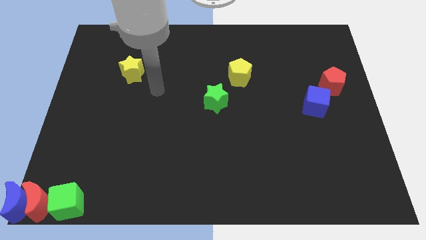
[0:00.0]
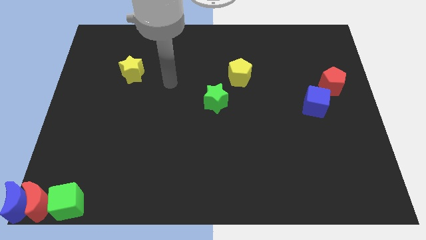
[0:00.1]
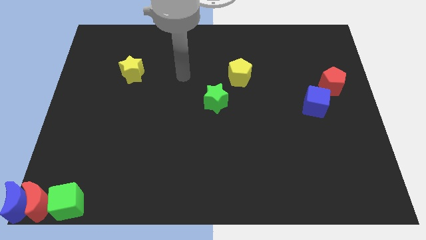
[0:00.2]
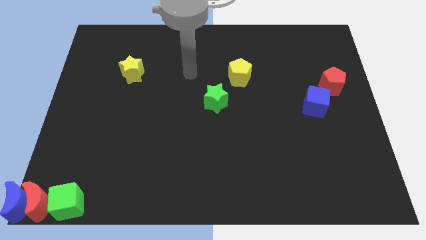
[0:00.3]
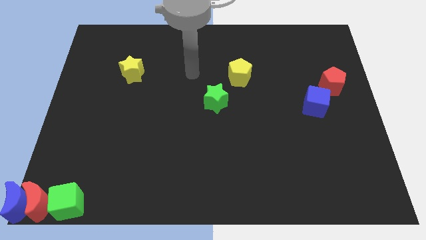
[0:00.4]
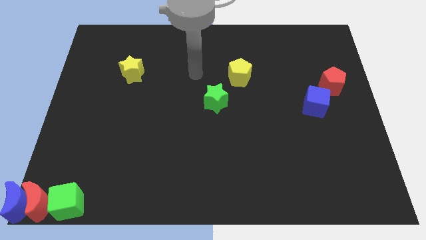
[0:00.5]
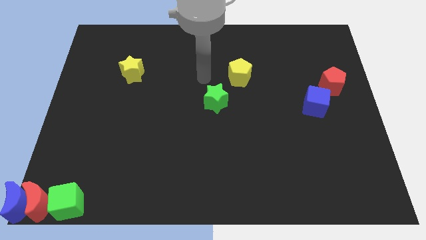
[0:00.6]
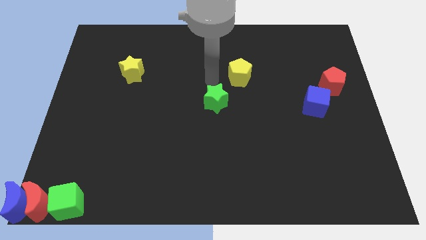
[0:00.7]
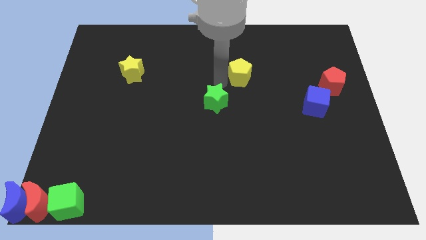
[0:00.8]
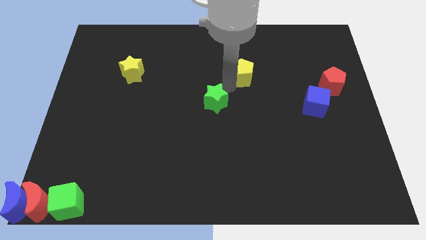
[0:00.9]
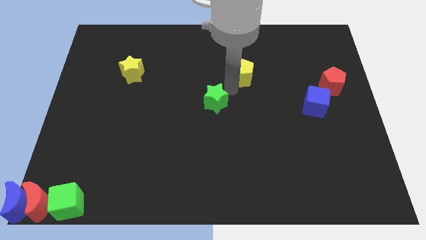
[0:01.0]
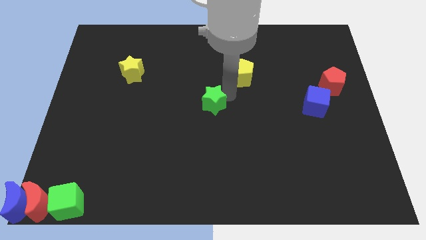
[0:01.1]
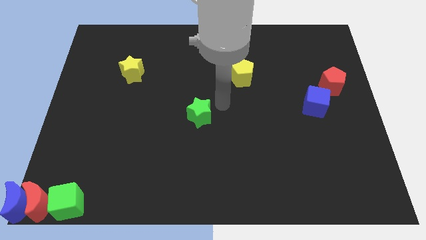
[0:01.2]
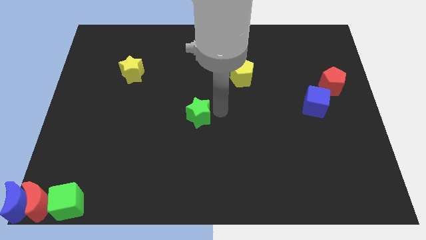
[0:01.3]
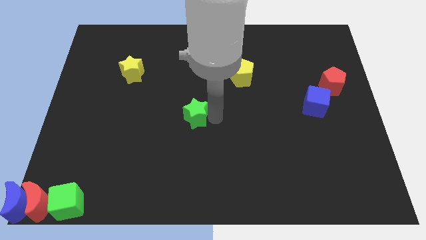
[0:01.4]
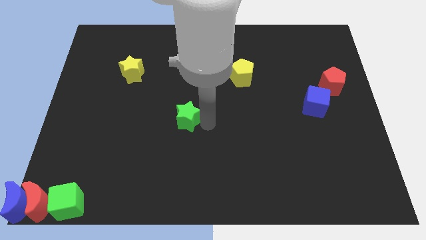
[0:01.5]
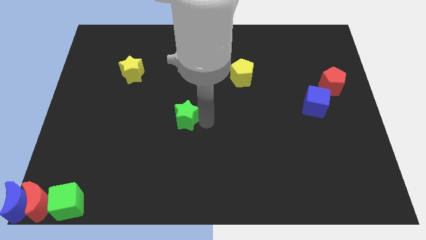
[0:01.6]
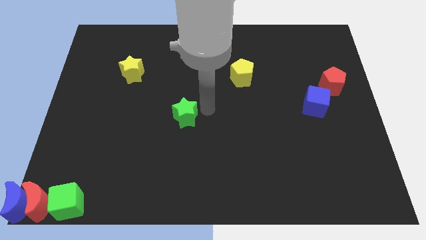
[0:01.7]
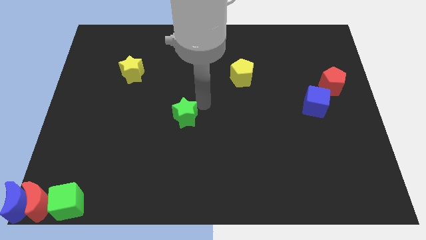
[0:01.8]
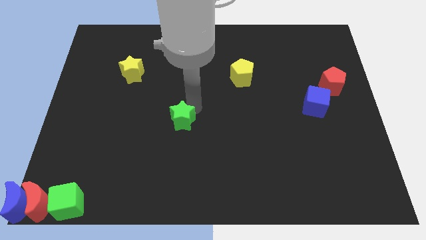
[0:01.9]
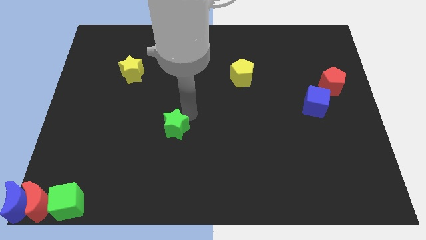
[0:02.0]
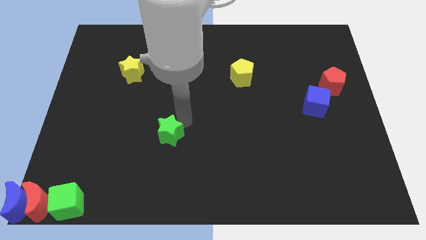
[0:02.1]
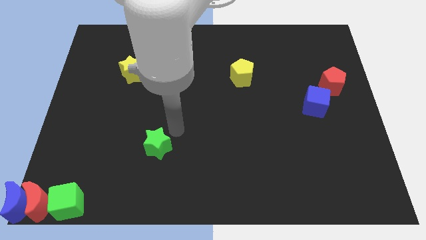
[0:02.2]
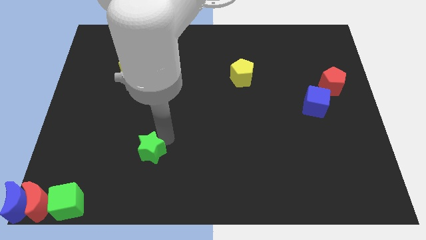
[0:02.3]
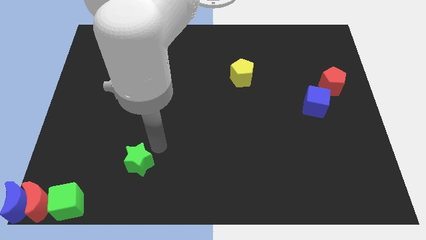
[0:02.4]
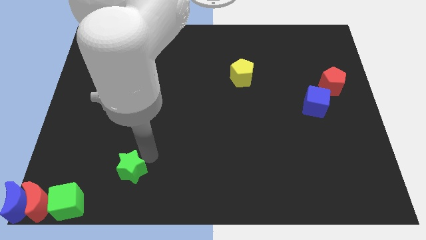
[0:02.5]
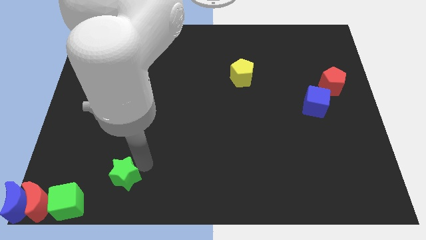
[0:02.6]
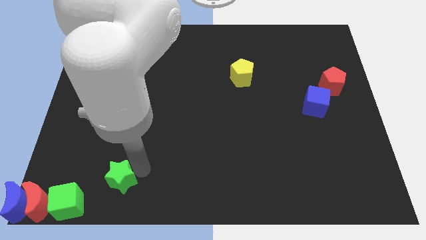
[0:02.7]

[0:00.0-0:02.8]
place the green star diagonally top right to the green cube

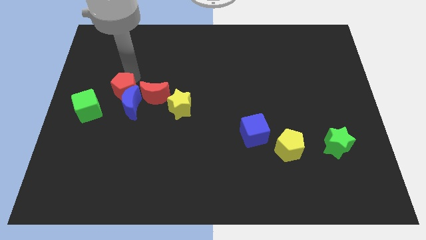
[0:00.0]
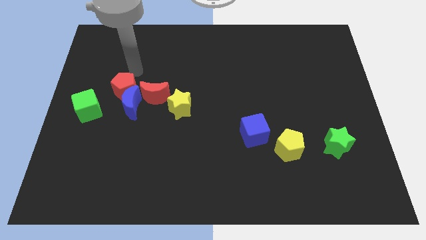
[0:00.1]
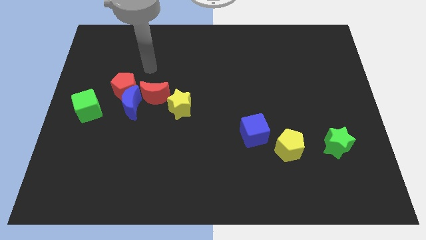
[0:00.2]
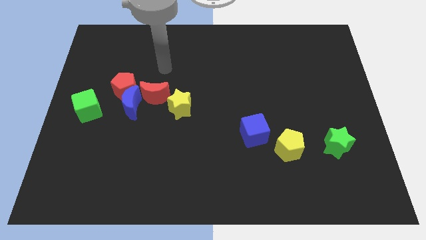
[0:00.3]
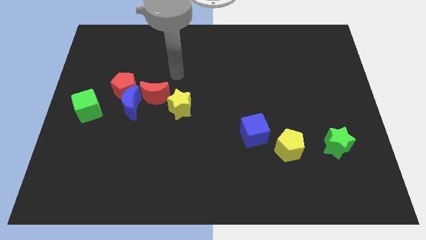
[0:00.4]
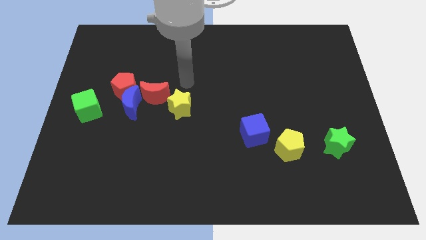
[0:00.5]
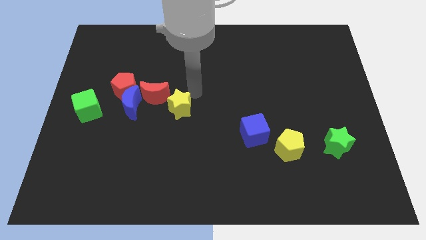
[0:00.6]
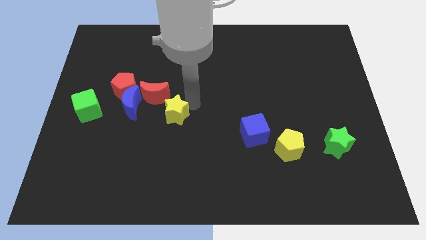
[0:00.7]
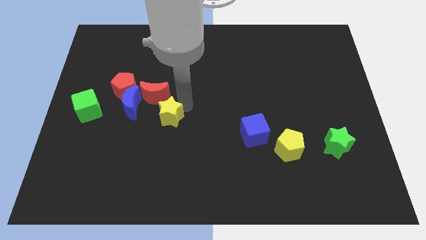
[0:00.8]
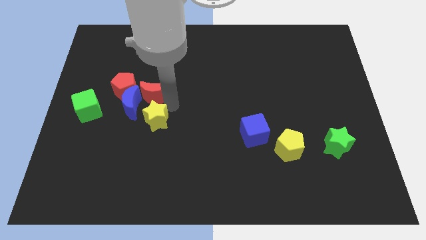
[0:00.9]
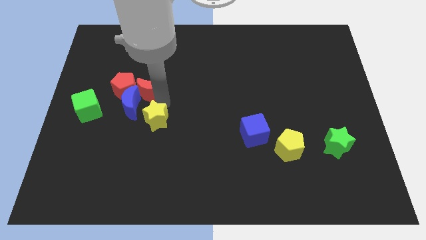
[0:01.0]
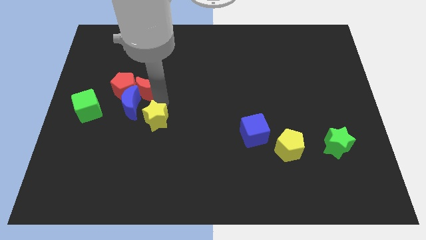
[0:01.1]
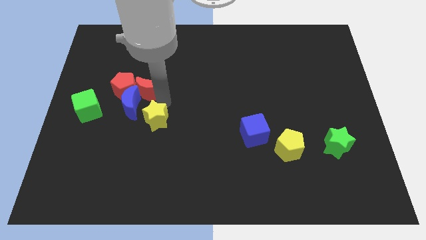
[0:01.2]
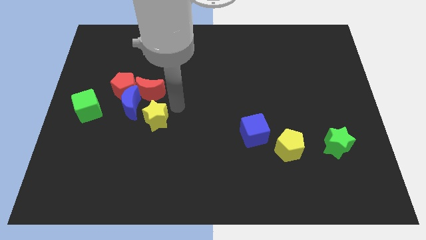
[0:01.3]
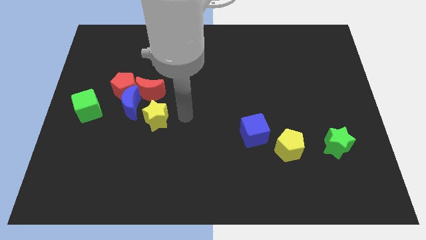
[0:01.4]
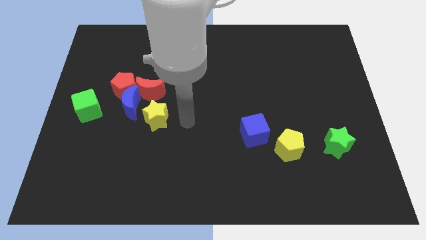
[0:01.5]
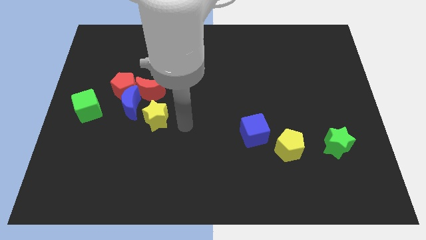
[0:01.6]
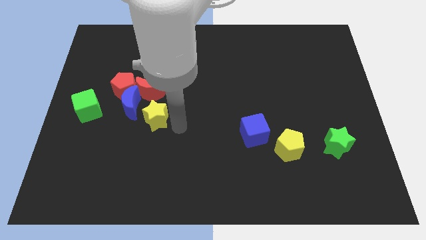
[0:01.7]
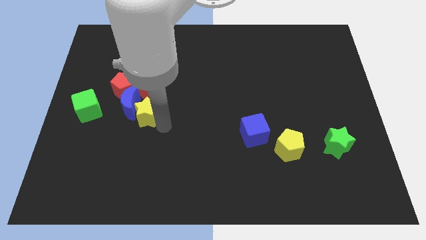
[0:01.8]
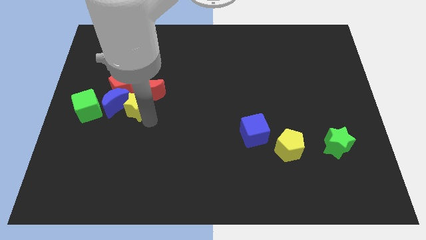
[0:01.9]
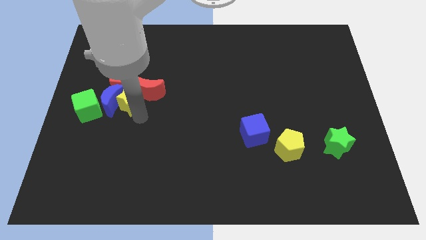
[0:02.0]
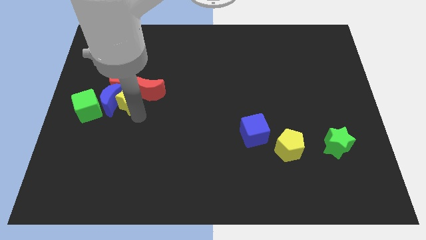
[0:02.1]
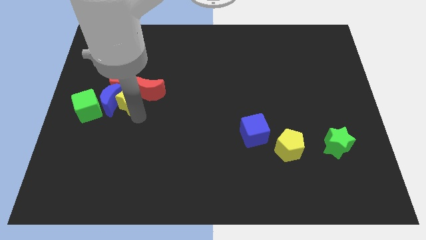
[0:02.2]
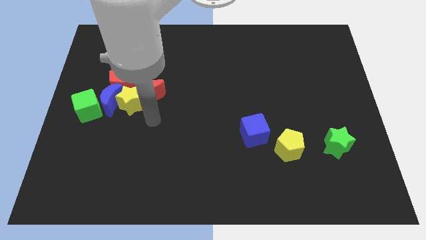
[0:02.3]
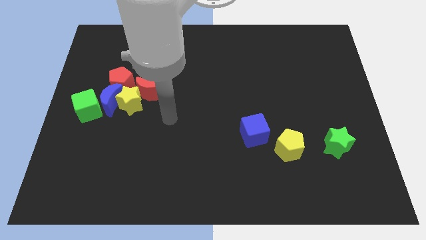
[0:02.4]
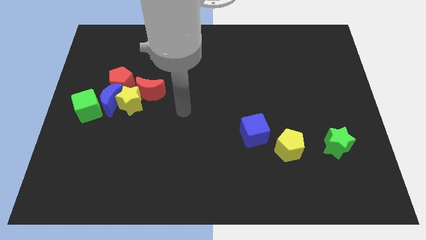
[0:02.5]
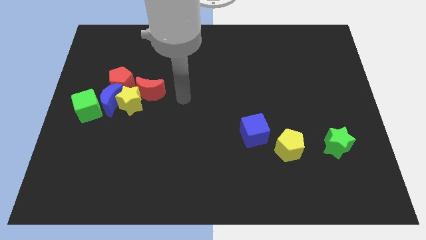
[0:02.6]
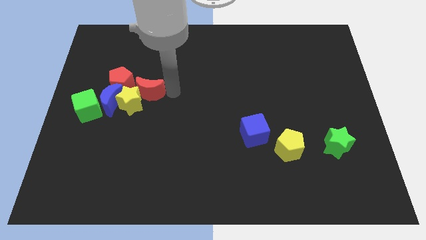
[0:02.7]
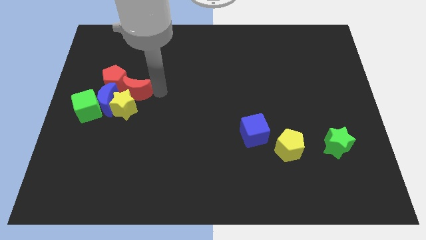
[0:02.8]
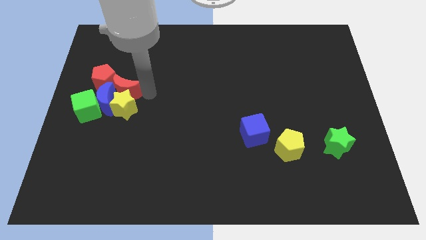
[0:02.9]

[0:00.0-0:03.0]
push the yellow star into the bottom of the blue crescent

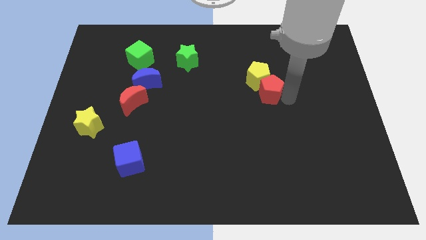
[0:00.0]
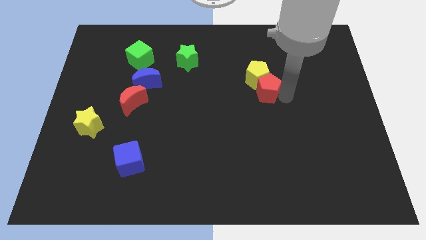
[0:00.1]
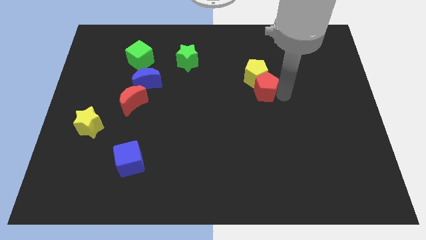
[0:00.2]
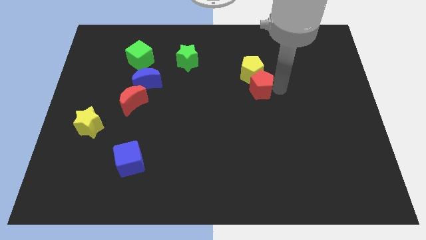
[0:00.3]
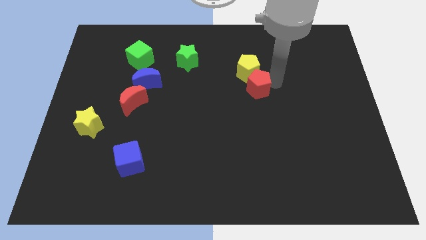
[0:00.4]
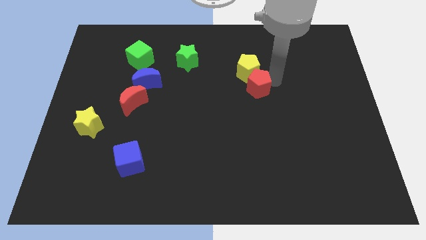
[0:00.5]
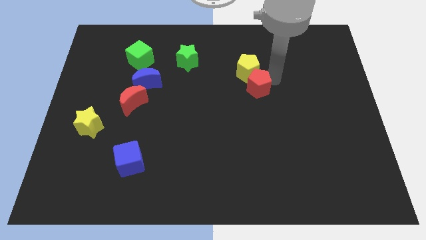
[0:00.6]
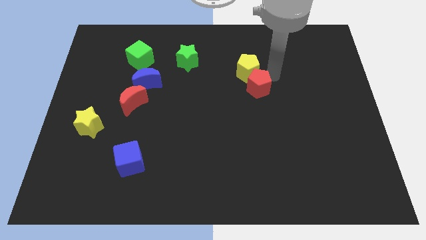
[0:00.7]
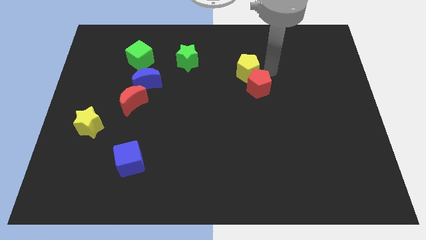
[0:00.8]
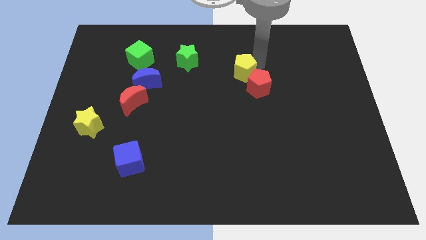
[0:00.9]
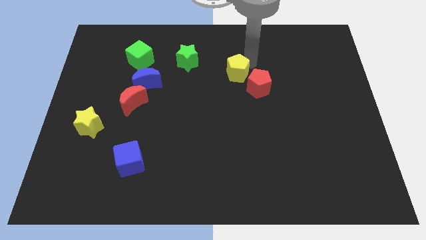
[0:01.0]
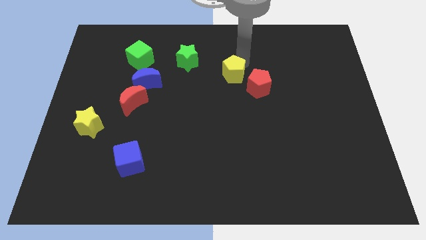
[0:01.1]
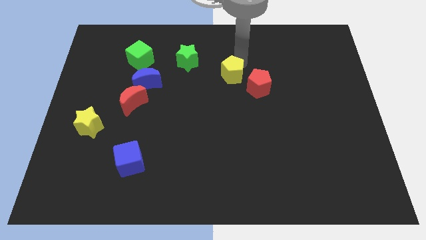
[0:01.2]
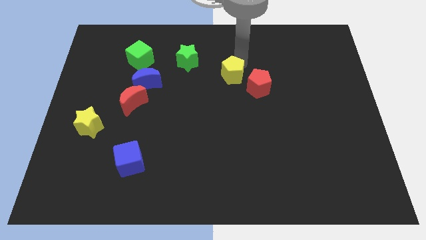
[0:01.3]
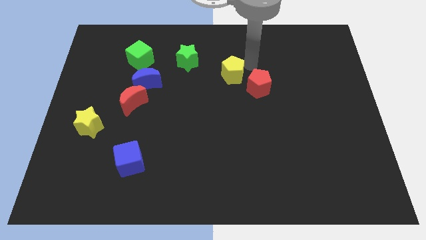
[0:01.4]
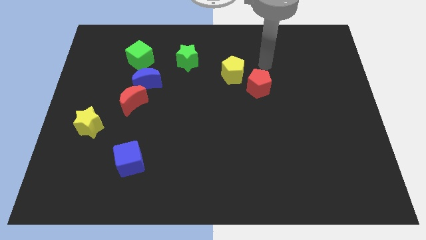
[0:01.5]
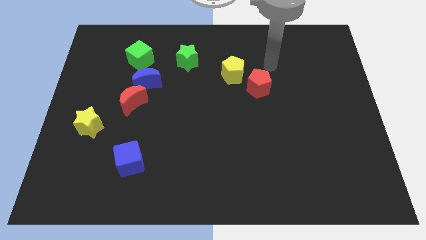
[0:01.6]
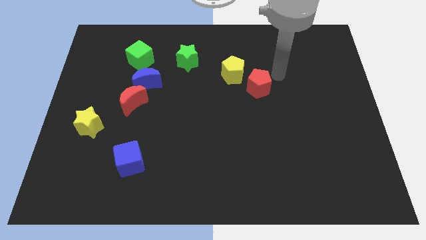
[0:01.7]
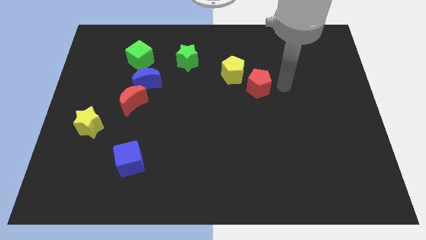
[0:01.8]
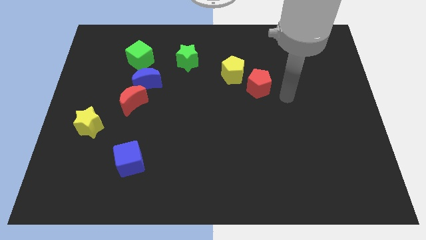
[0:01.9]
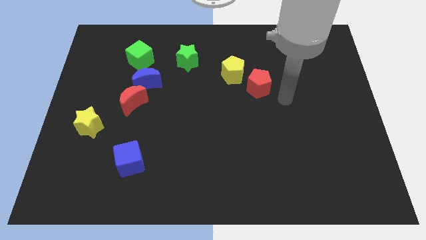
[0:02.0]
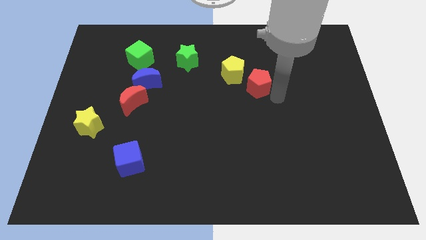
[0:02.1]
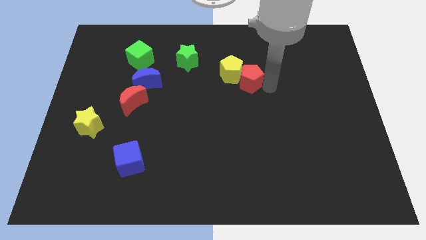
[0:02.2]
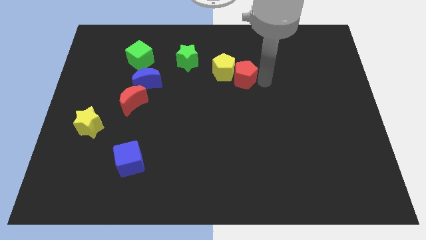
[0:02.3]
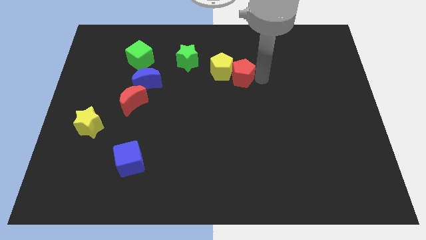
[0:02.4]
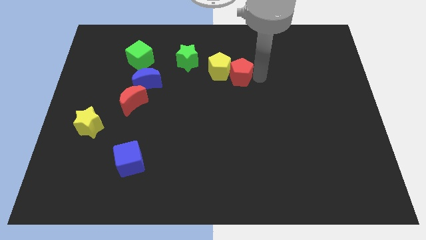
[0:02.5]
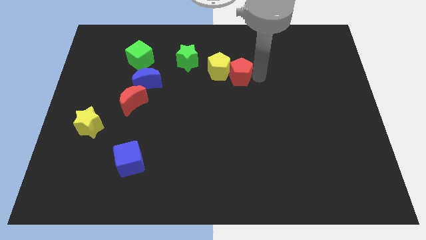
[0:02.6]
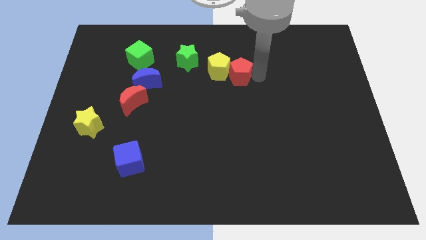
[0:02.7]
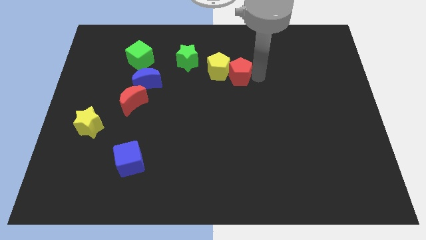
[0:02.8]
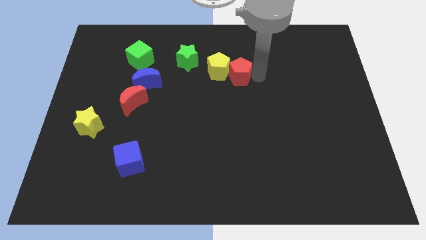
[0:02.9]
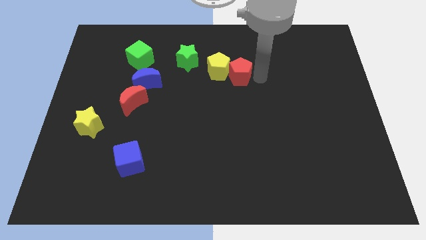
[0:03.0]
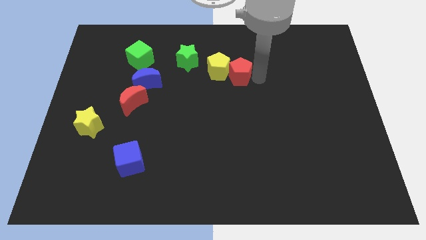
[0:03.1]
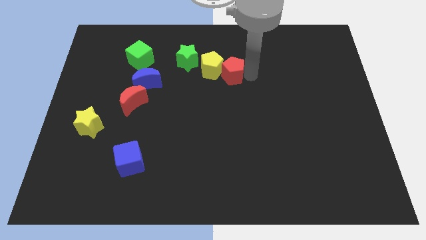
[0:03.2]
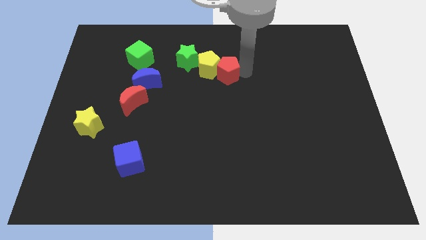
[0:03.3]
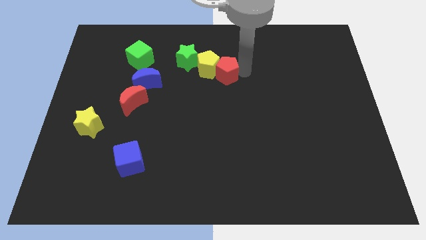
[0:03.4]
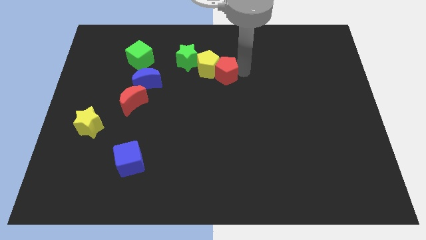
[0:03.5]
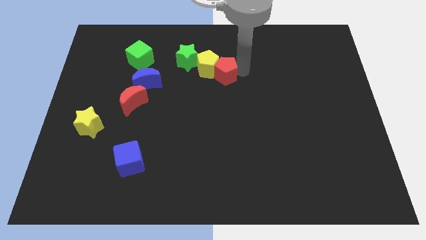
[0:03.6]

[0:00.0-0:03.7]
make a diagonal line out of green star red and the yellow pentagon
